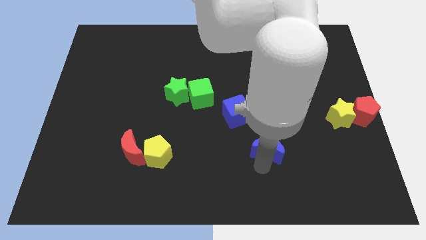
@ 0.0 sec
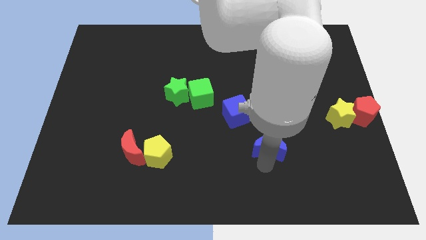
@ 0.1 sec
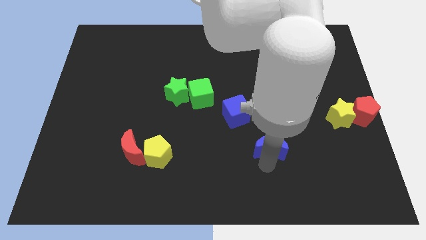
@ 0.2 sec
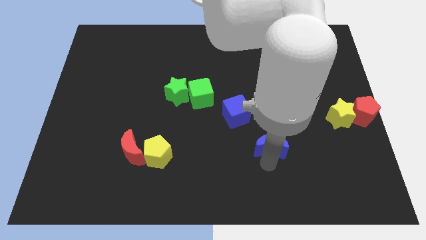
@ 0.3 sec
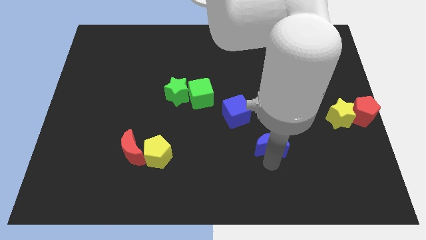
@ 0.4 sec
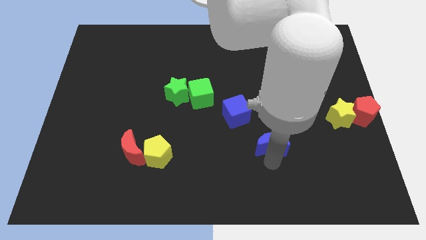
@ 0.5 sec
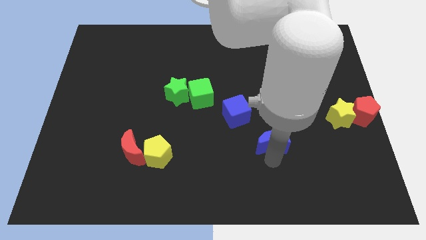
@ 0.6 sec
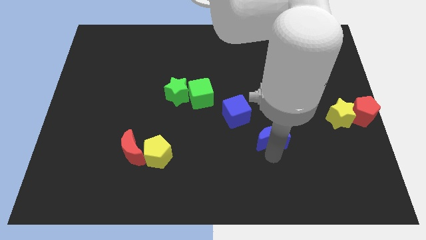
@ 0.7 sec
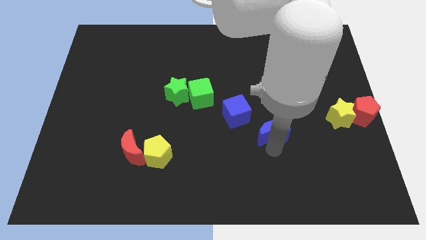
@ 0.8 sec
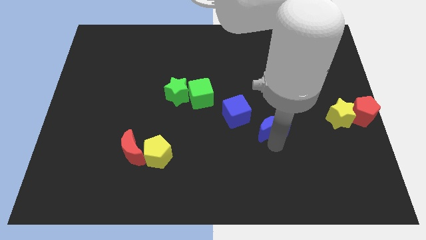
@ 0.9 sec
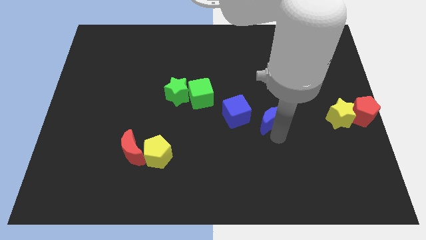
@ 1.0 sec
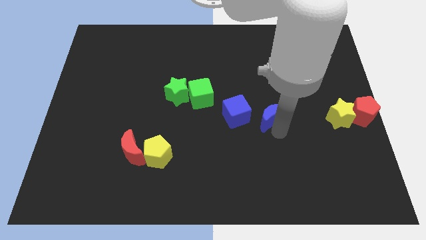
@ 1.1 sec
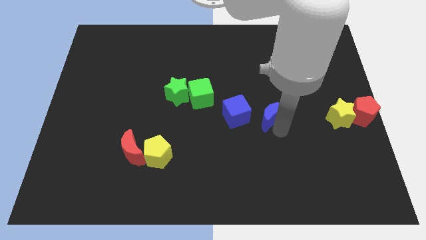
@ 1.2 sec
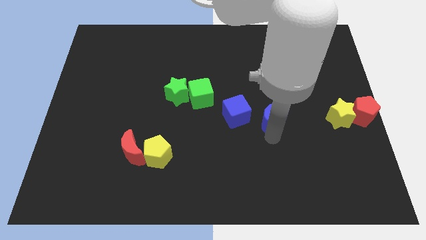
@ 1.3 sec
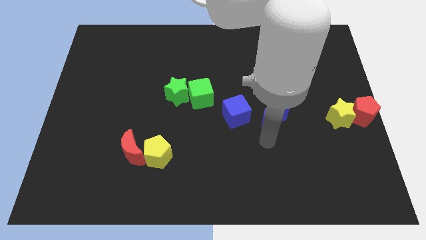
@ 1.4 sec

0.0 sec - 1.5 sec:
place blue moon to the right of blue cube

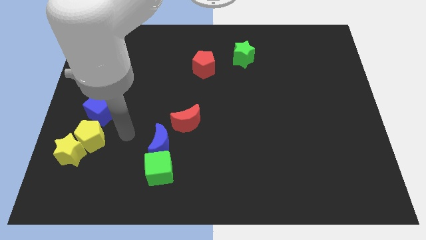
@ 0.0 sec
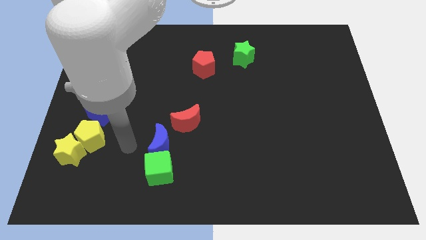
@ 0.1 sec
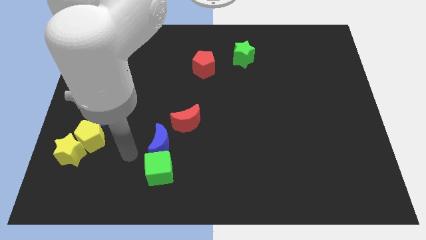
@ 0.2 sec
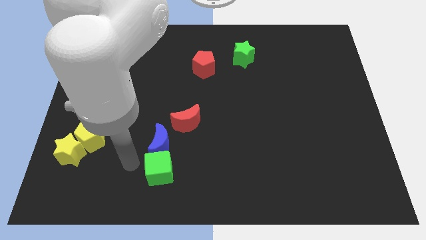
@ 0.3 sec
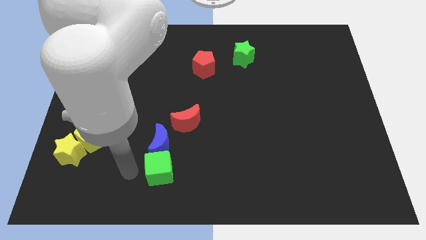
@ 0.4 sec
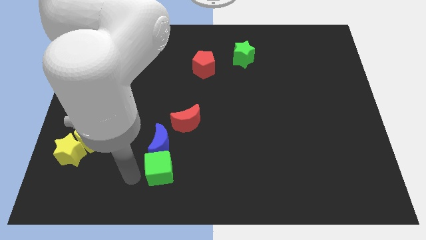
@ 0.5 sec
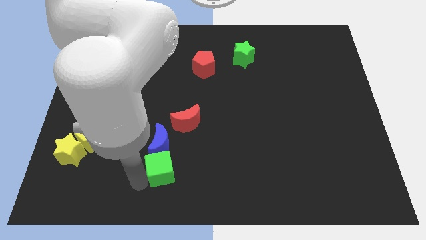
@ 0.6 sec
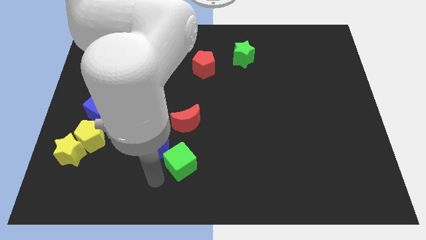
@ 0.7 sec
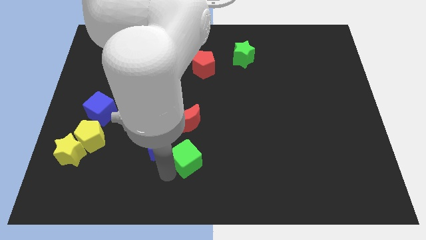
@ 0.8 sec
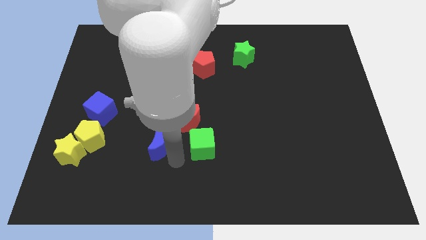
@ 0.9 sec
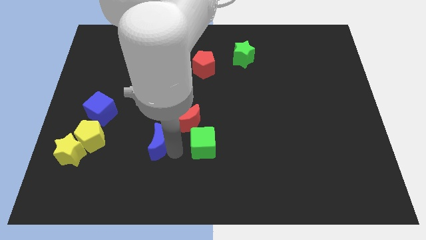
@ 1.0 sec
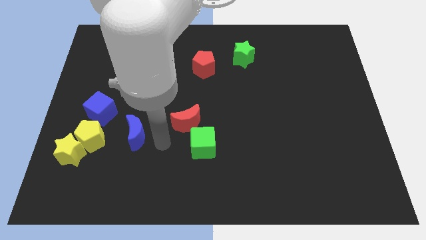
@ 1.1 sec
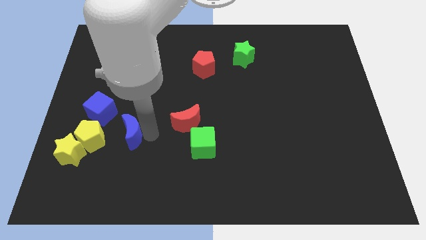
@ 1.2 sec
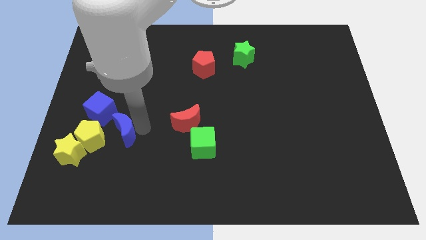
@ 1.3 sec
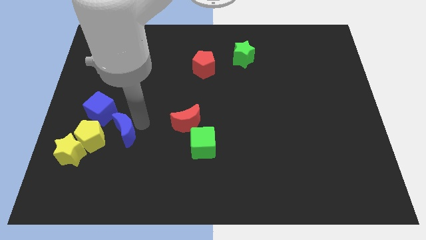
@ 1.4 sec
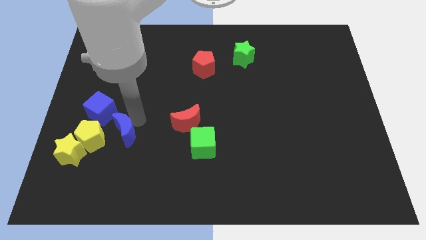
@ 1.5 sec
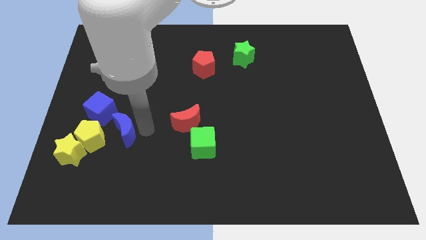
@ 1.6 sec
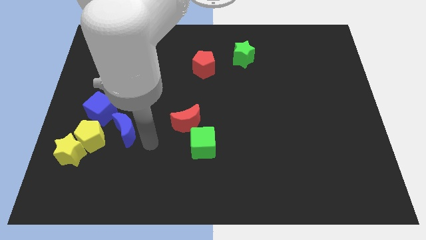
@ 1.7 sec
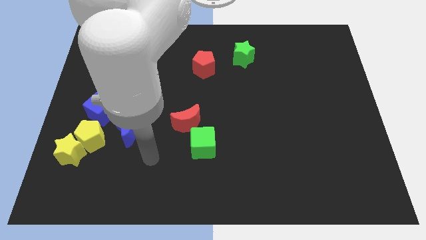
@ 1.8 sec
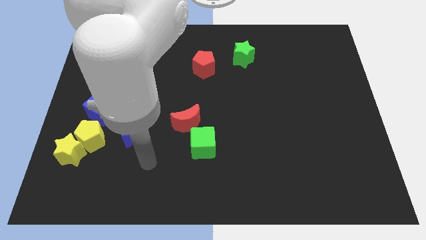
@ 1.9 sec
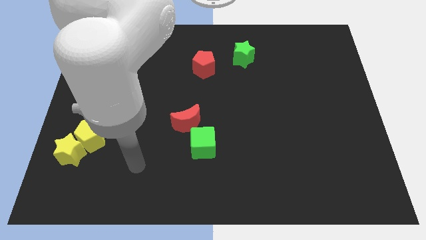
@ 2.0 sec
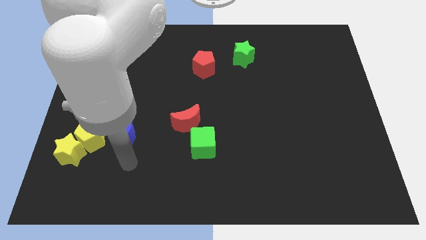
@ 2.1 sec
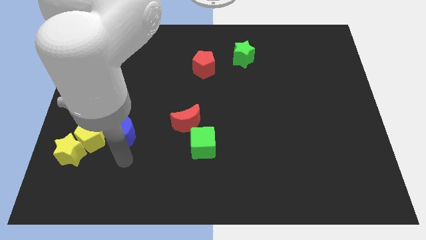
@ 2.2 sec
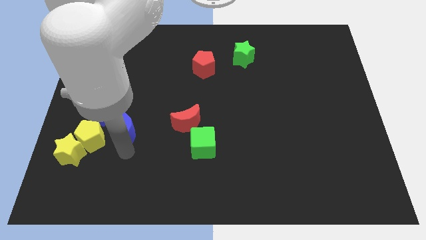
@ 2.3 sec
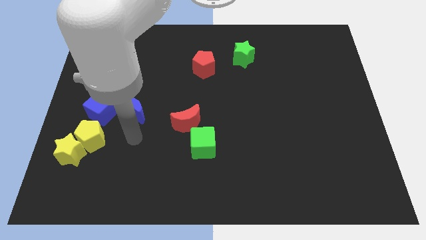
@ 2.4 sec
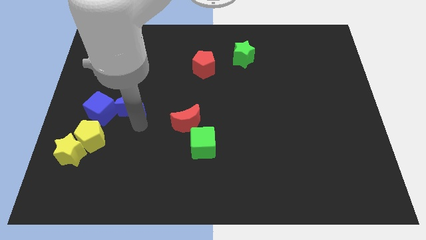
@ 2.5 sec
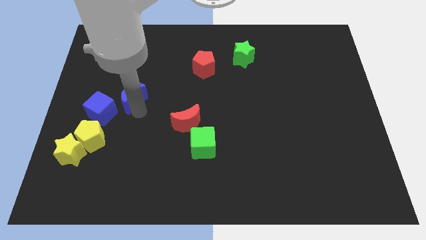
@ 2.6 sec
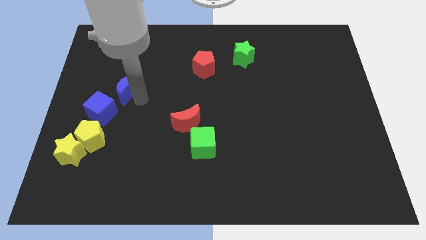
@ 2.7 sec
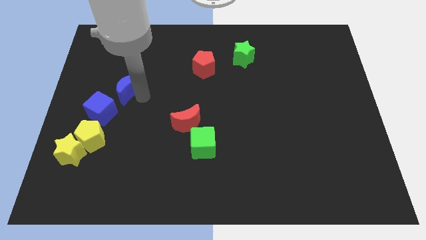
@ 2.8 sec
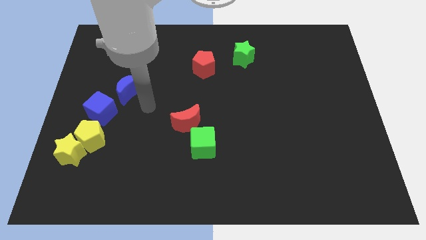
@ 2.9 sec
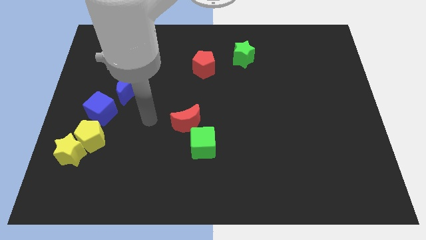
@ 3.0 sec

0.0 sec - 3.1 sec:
place the blue crescent above to the blue cube

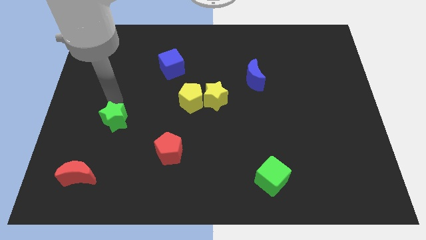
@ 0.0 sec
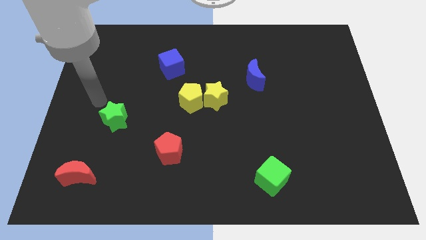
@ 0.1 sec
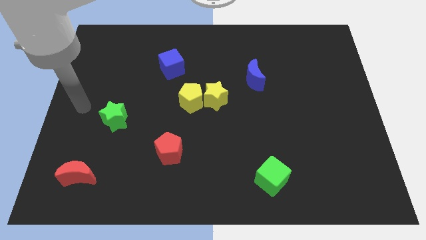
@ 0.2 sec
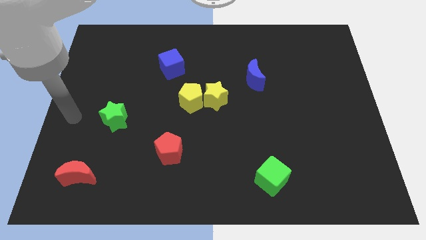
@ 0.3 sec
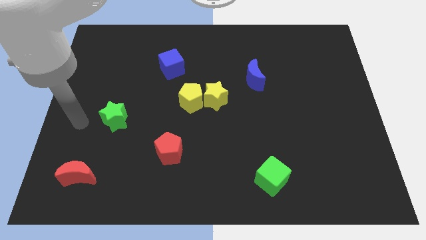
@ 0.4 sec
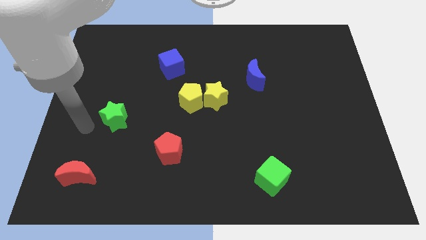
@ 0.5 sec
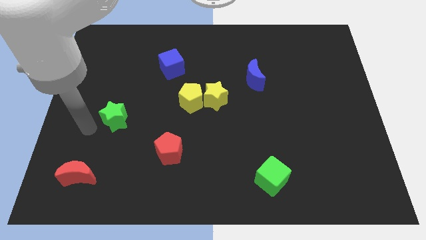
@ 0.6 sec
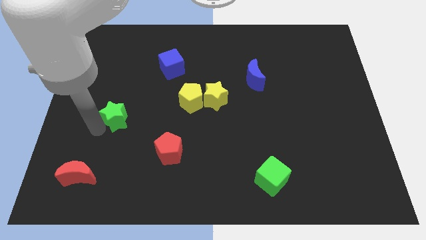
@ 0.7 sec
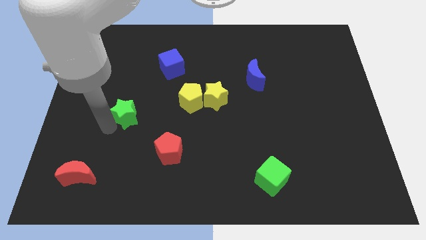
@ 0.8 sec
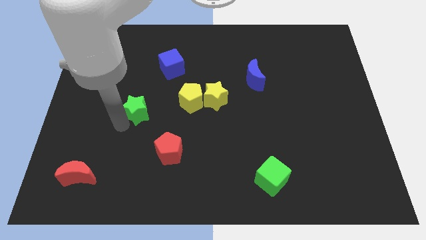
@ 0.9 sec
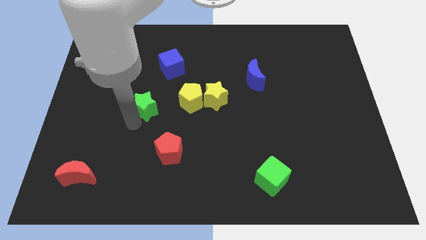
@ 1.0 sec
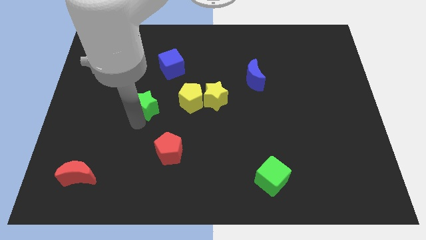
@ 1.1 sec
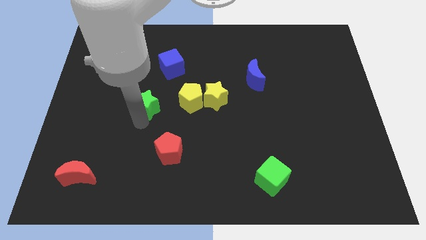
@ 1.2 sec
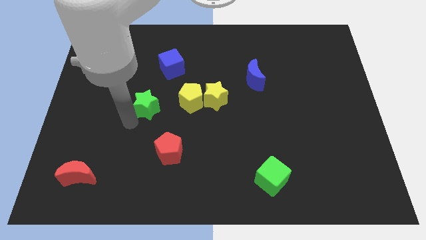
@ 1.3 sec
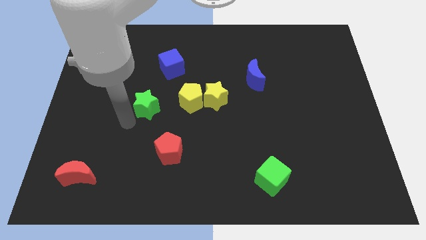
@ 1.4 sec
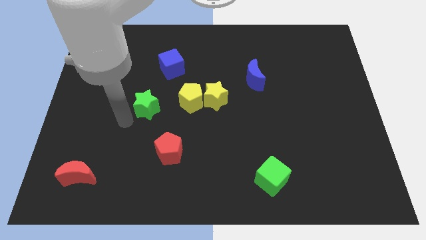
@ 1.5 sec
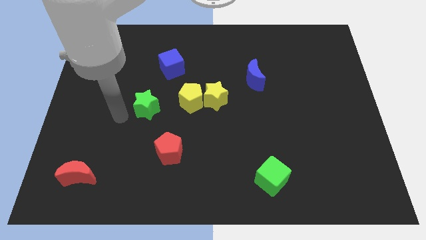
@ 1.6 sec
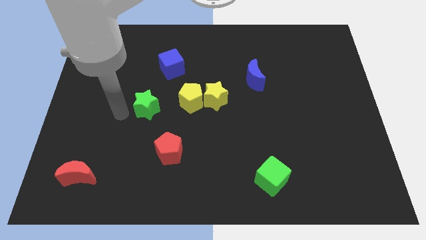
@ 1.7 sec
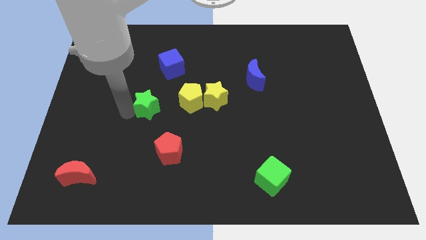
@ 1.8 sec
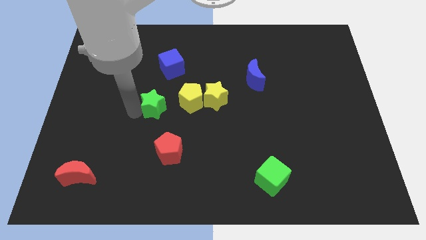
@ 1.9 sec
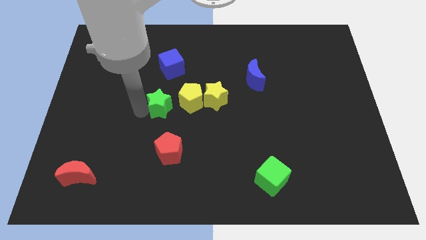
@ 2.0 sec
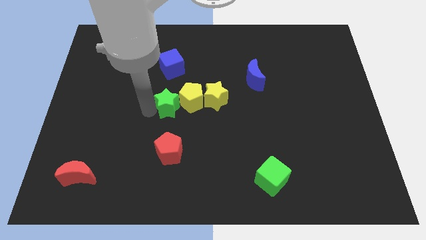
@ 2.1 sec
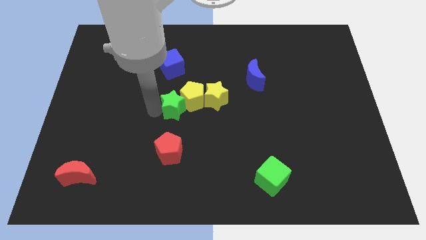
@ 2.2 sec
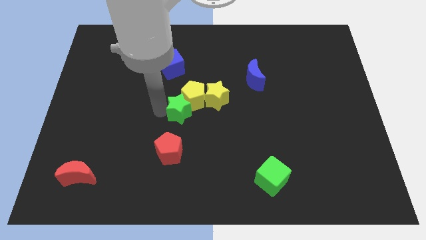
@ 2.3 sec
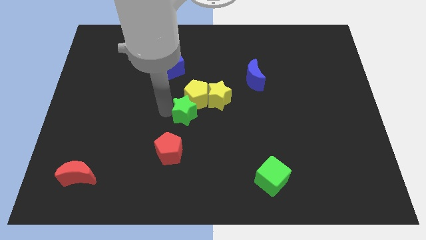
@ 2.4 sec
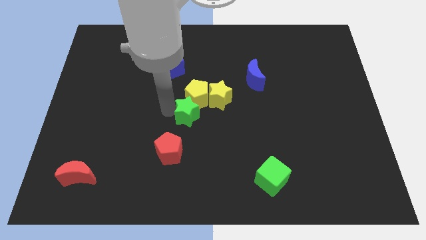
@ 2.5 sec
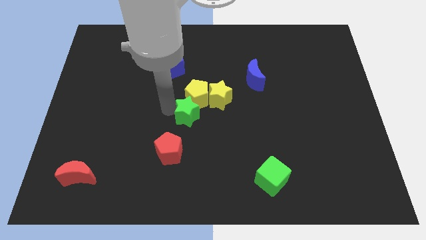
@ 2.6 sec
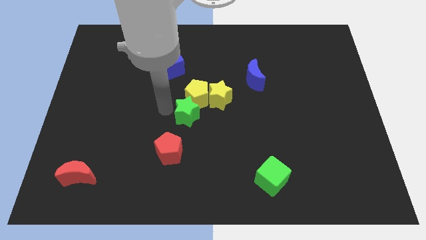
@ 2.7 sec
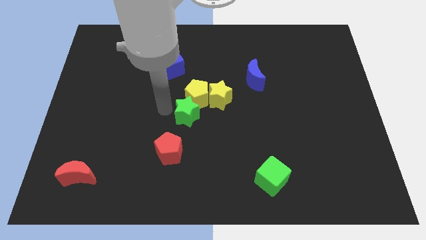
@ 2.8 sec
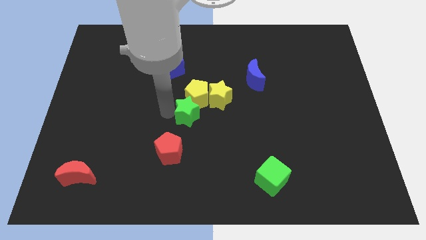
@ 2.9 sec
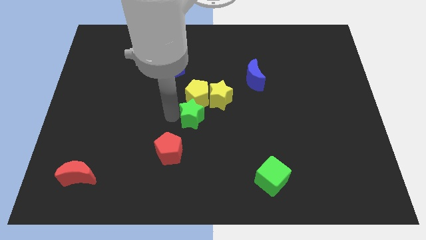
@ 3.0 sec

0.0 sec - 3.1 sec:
move green star left below the yellow pentagon

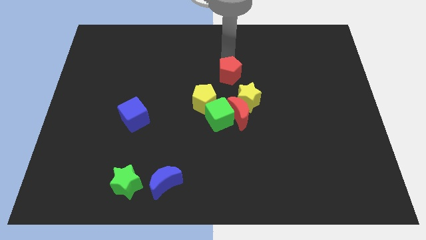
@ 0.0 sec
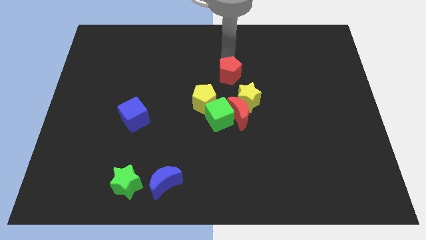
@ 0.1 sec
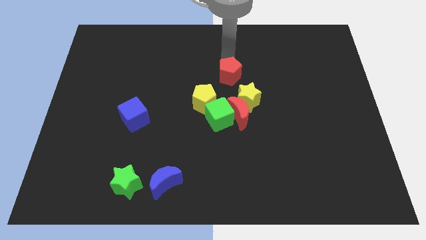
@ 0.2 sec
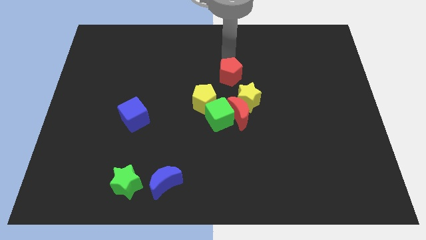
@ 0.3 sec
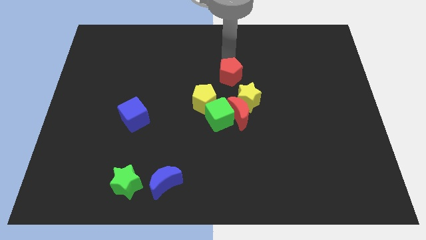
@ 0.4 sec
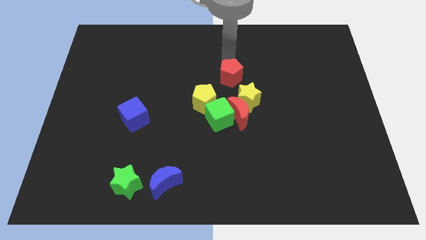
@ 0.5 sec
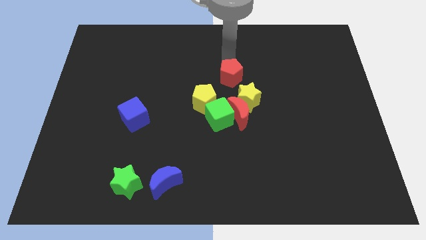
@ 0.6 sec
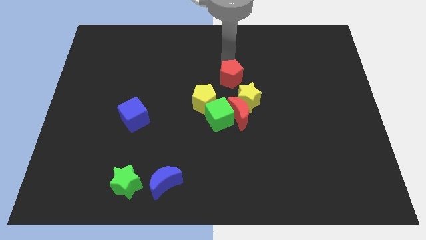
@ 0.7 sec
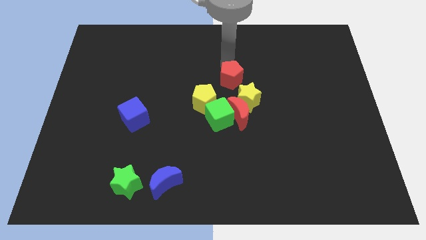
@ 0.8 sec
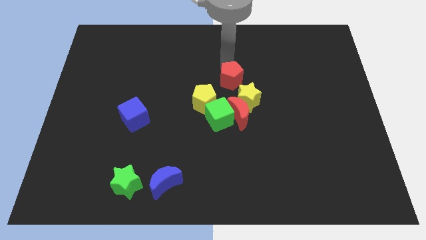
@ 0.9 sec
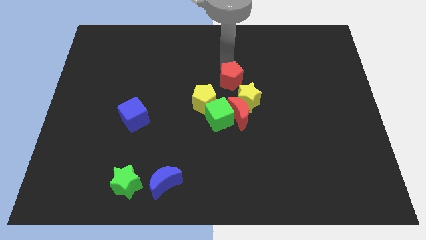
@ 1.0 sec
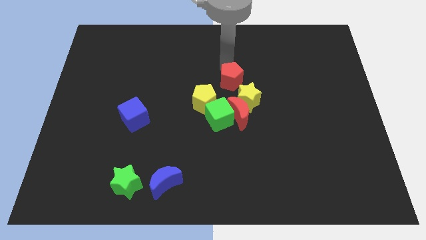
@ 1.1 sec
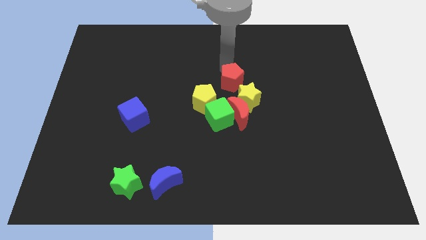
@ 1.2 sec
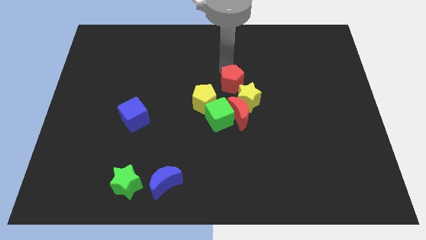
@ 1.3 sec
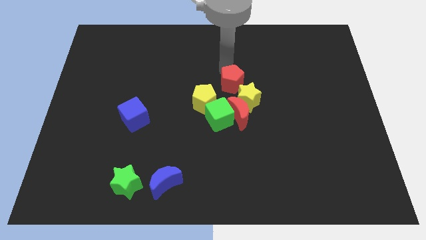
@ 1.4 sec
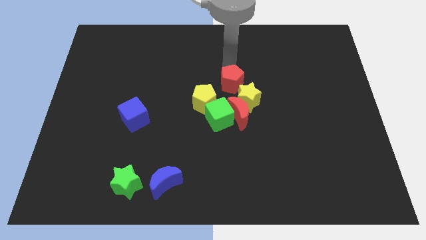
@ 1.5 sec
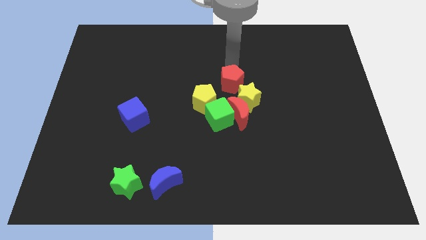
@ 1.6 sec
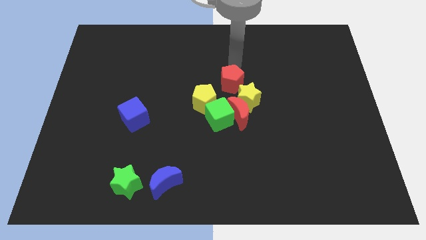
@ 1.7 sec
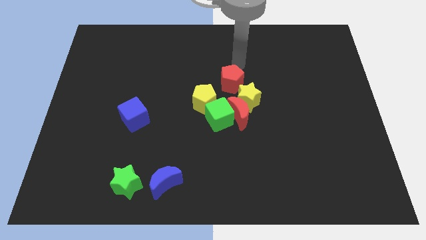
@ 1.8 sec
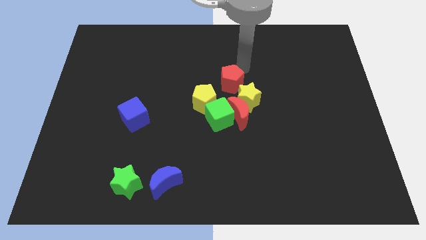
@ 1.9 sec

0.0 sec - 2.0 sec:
move the red pentagon to the top left of the yellow star
